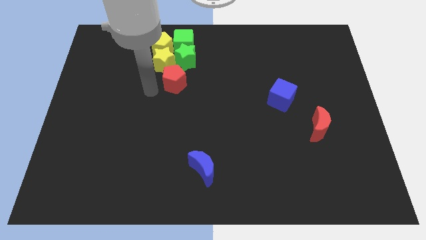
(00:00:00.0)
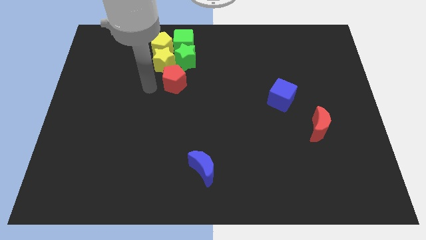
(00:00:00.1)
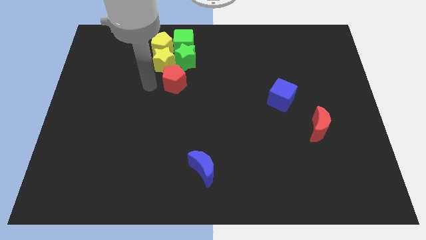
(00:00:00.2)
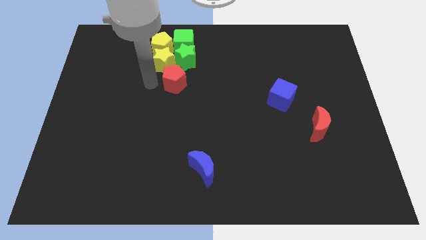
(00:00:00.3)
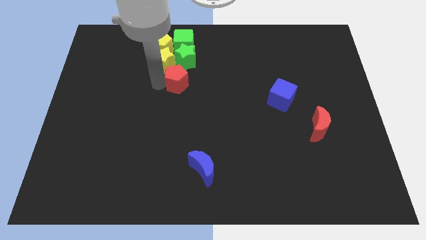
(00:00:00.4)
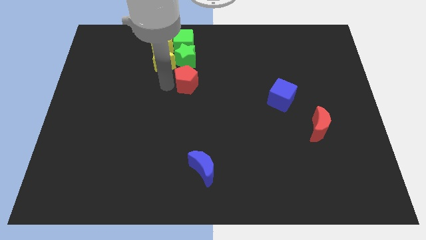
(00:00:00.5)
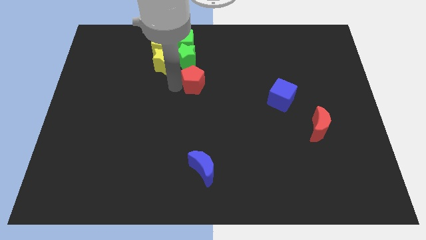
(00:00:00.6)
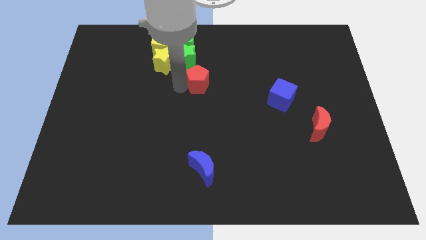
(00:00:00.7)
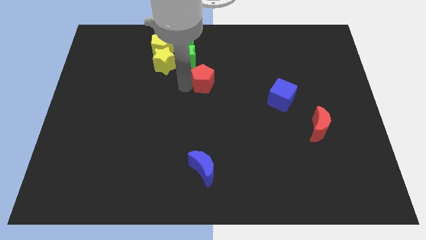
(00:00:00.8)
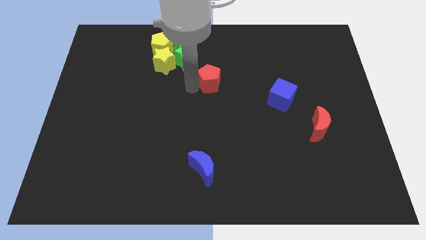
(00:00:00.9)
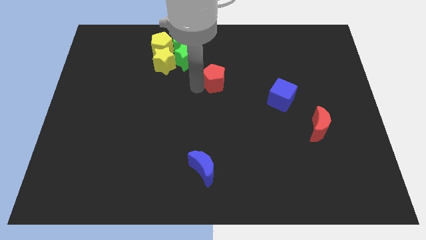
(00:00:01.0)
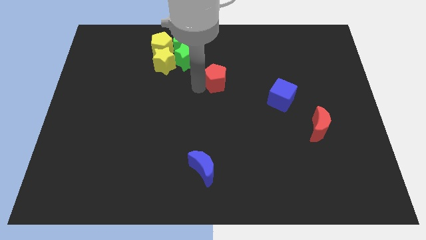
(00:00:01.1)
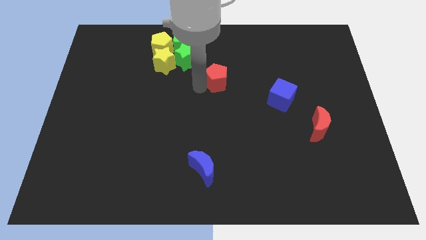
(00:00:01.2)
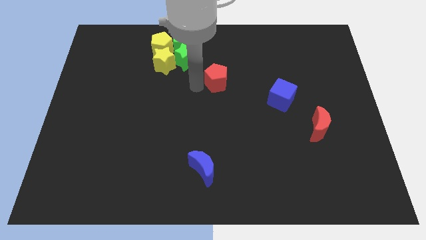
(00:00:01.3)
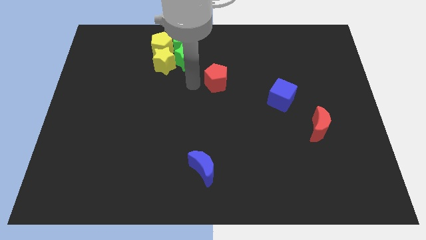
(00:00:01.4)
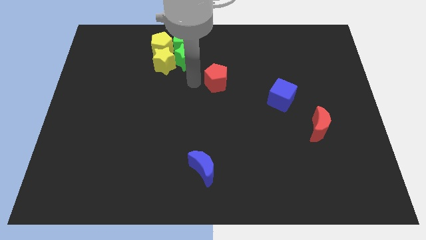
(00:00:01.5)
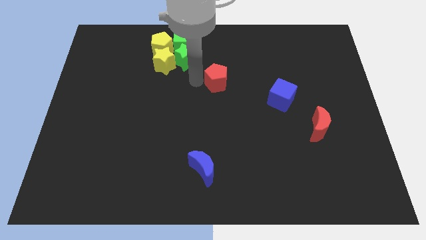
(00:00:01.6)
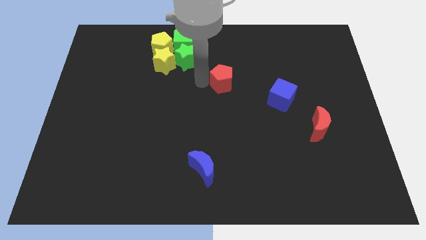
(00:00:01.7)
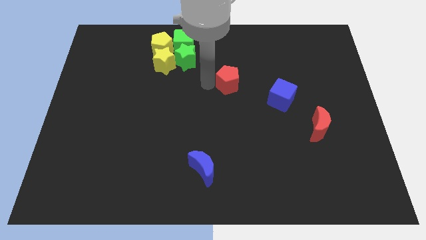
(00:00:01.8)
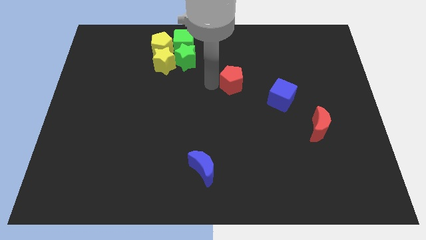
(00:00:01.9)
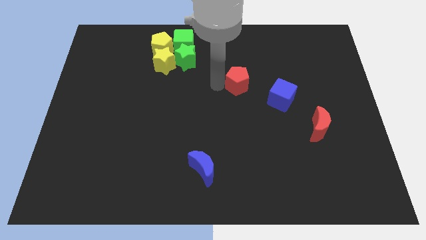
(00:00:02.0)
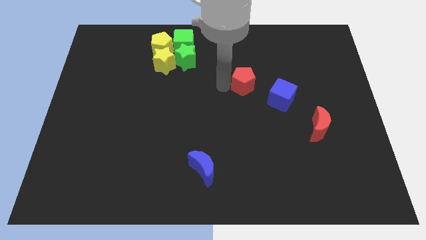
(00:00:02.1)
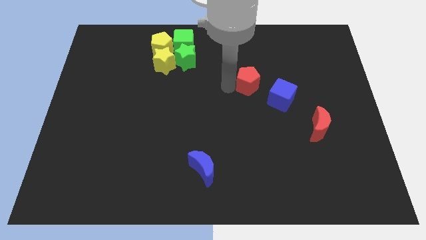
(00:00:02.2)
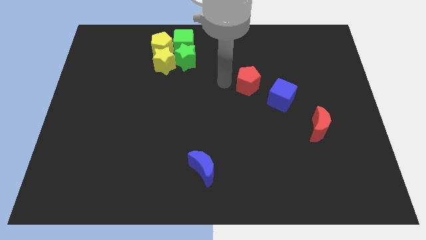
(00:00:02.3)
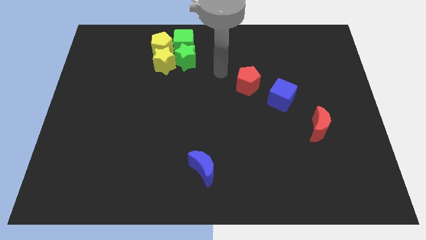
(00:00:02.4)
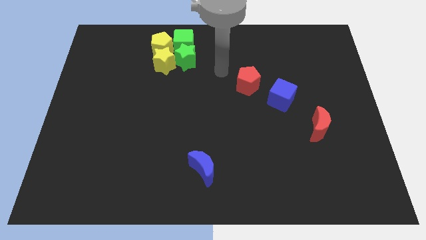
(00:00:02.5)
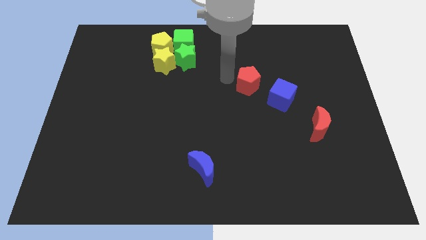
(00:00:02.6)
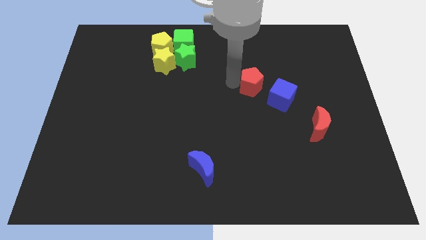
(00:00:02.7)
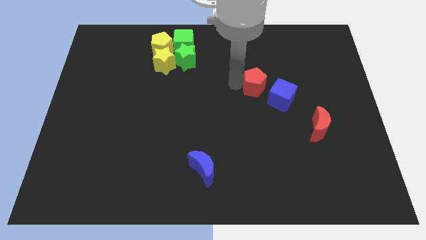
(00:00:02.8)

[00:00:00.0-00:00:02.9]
place red pentagon to the top left of blue cube

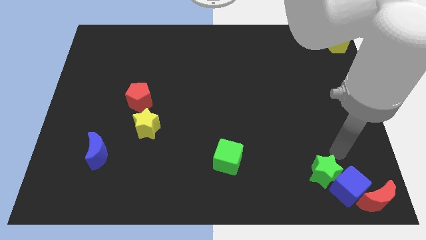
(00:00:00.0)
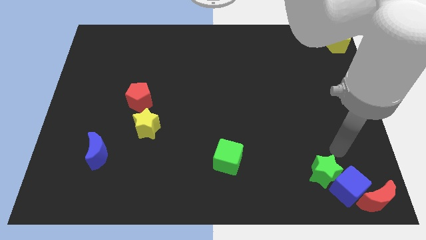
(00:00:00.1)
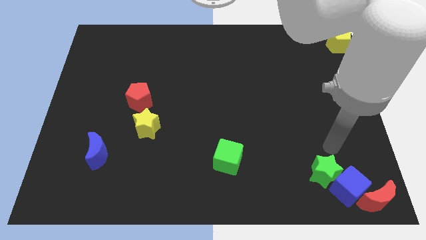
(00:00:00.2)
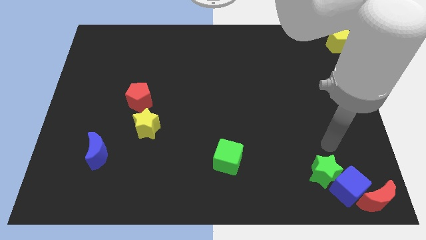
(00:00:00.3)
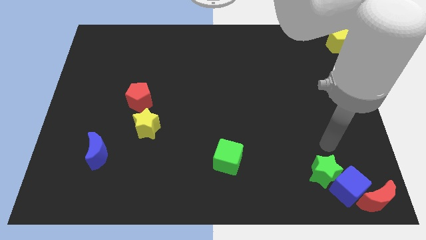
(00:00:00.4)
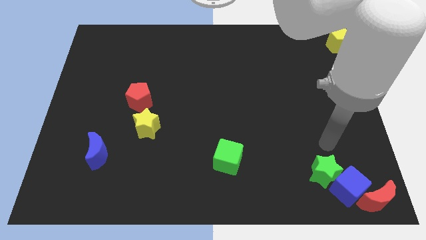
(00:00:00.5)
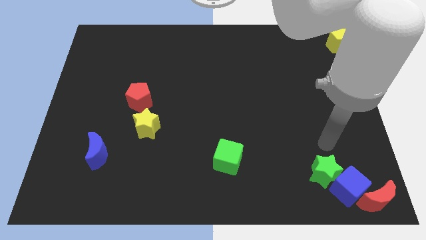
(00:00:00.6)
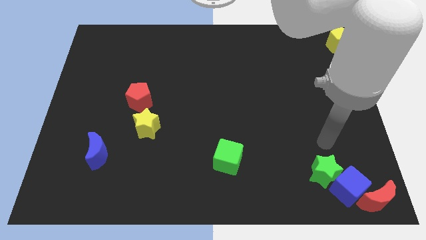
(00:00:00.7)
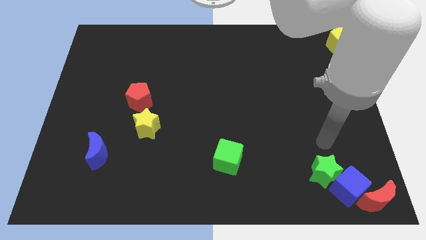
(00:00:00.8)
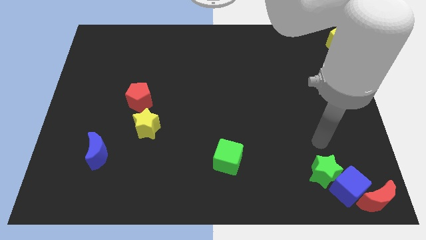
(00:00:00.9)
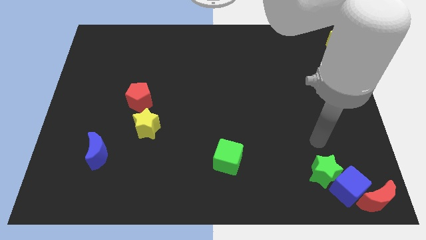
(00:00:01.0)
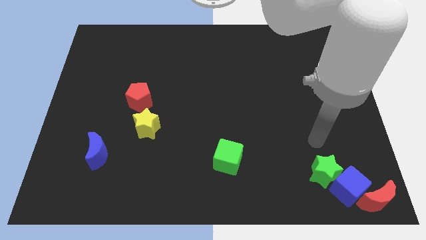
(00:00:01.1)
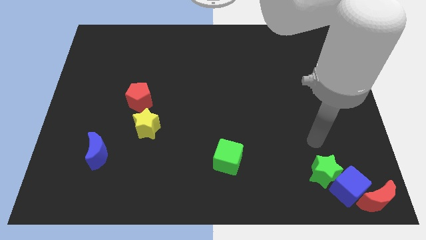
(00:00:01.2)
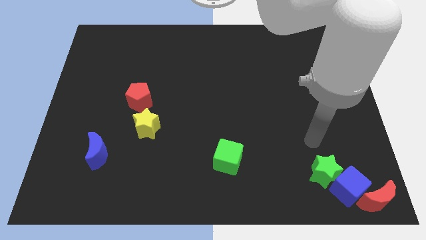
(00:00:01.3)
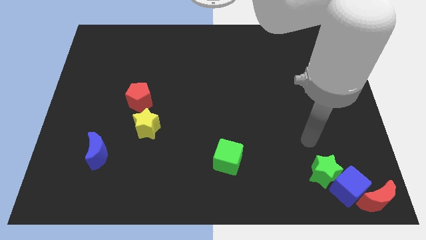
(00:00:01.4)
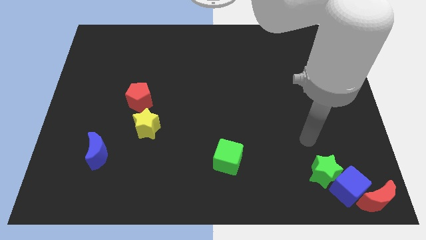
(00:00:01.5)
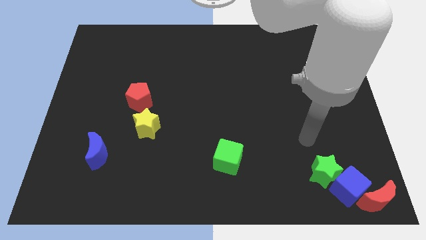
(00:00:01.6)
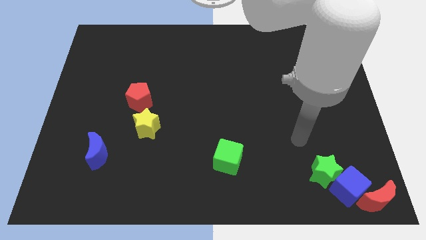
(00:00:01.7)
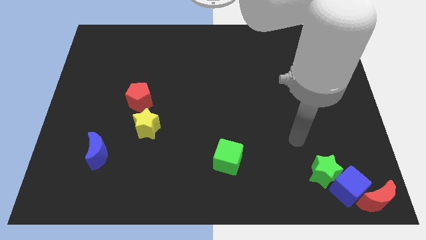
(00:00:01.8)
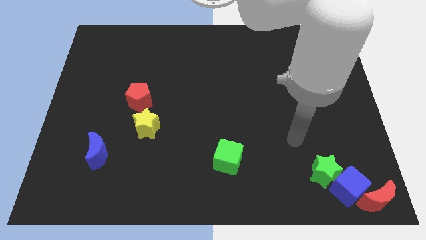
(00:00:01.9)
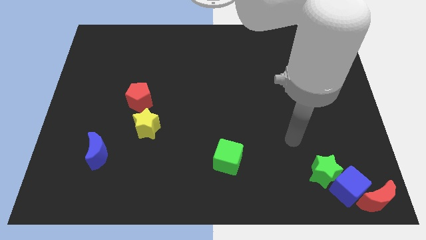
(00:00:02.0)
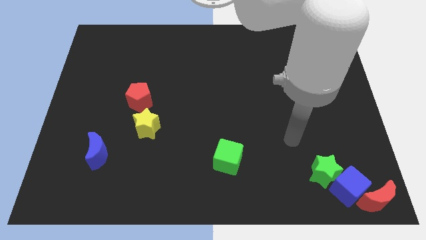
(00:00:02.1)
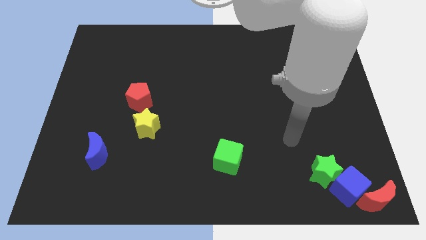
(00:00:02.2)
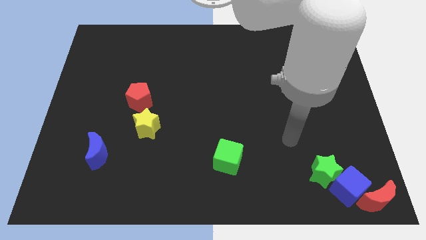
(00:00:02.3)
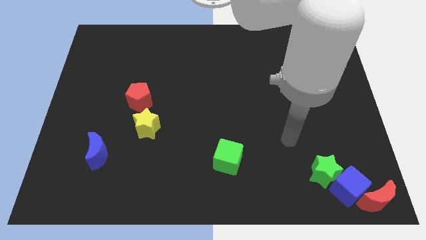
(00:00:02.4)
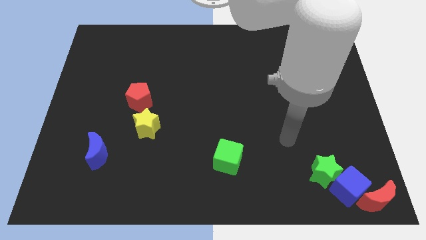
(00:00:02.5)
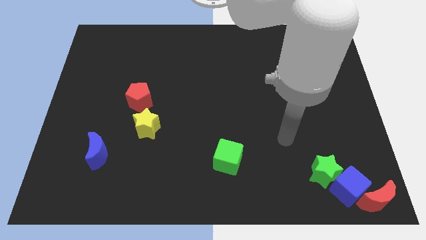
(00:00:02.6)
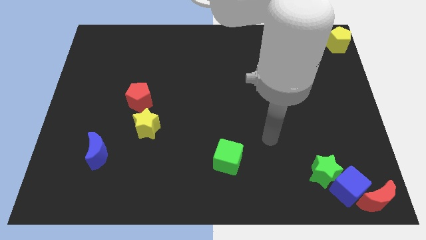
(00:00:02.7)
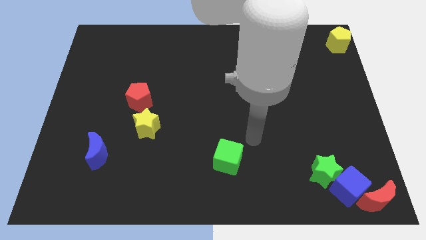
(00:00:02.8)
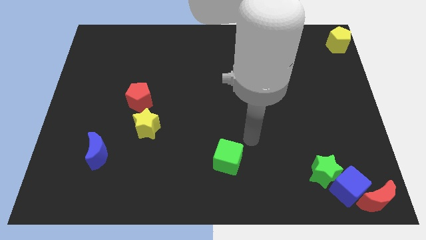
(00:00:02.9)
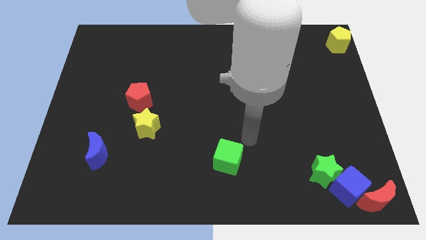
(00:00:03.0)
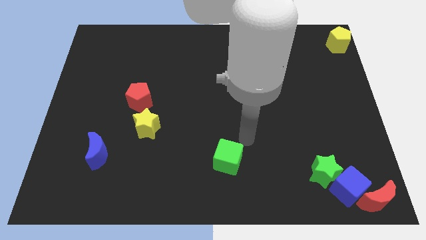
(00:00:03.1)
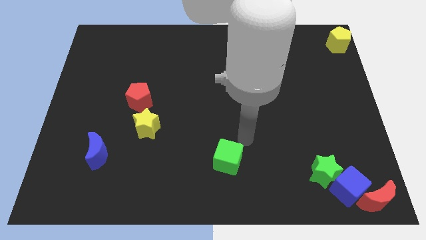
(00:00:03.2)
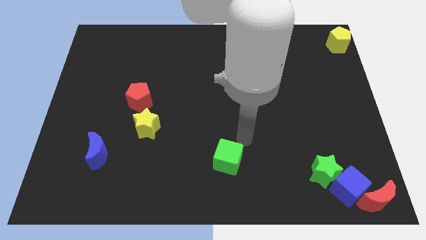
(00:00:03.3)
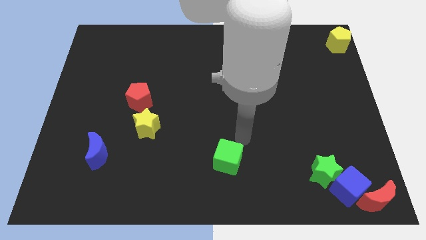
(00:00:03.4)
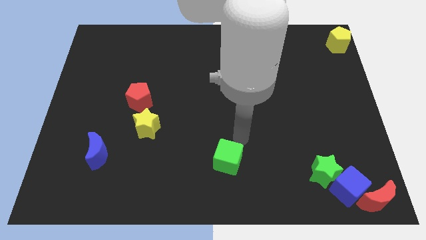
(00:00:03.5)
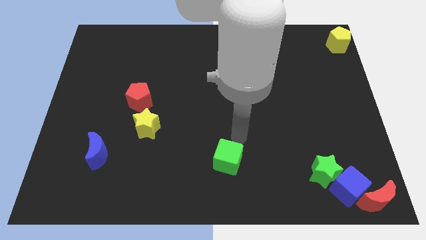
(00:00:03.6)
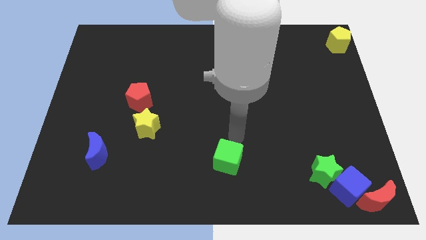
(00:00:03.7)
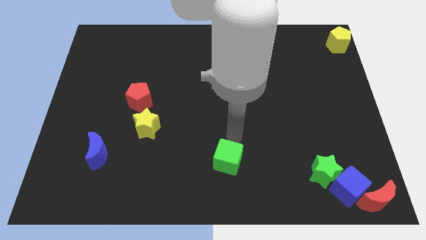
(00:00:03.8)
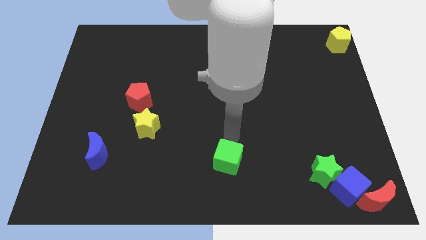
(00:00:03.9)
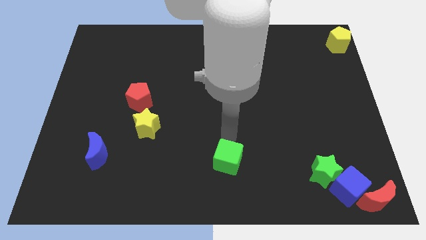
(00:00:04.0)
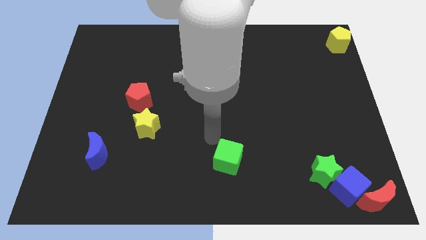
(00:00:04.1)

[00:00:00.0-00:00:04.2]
point your arm at the top of the green cube

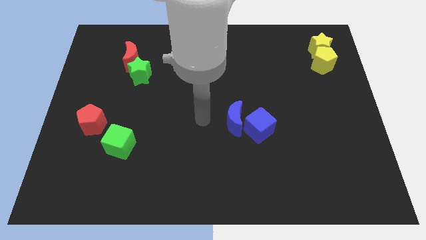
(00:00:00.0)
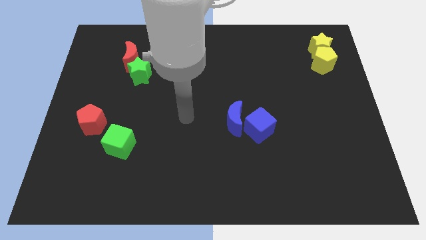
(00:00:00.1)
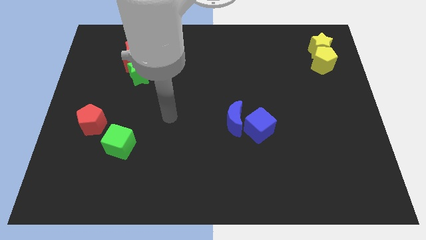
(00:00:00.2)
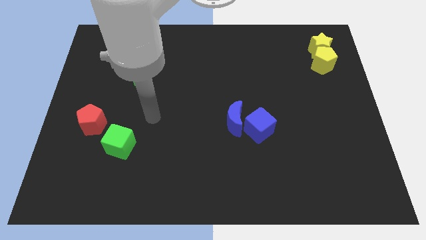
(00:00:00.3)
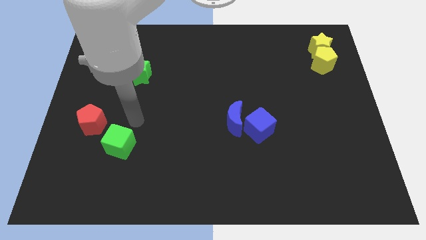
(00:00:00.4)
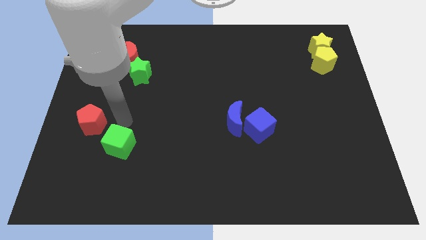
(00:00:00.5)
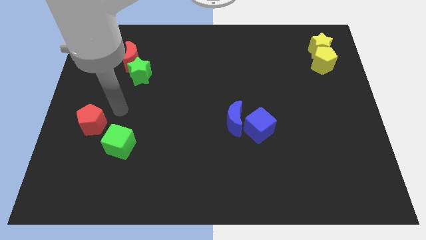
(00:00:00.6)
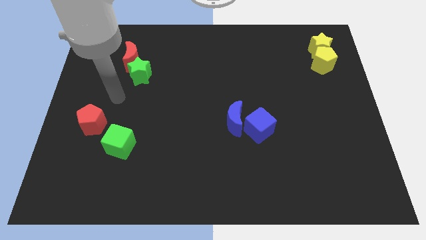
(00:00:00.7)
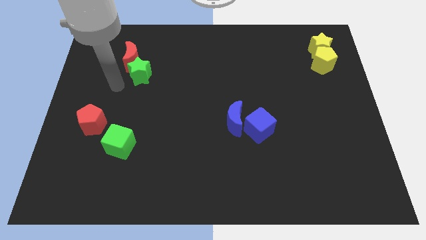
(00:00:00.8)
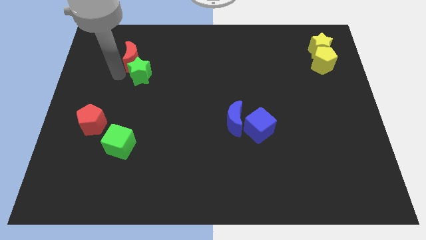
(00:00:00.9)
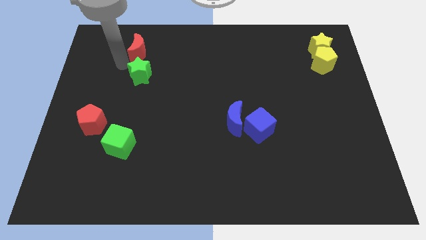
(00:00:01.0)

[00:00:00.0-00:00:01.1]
move your arm to the bottom of red crescent

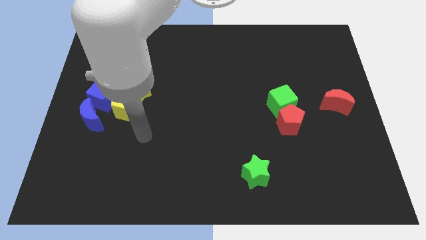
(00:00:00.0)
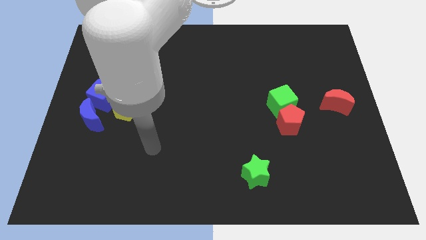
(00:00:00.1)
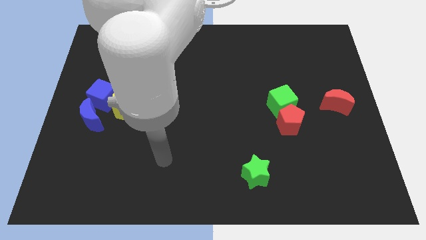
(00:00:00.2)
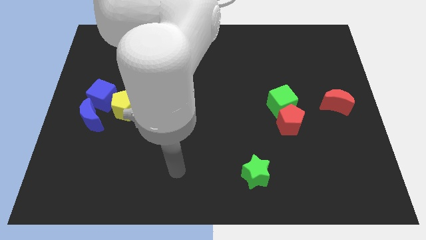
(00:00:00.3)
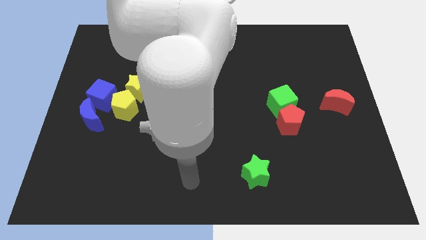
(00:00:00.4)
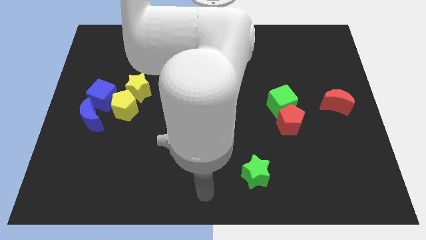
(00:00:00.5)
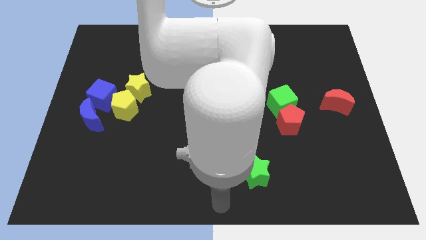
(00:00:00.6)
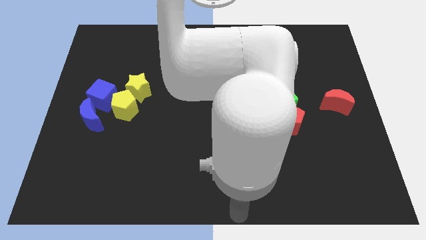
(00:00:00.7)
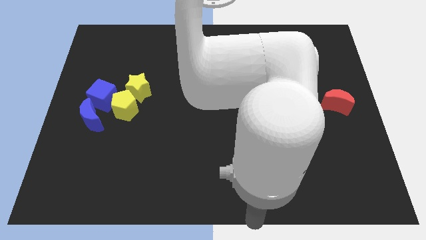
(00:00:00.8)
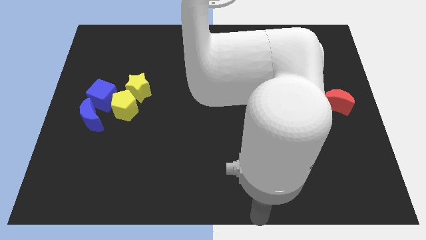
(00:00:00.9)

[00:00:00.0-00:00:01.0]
place your hand under the green star
